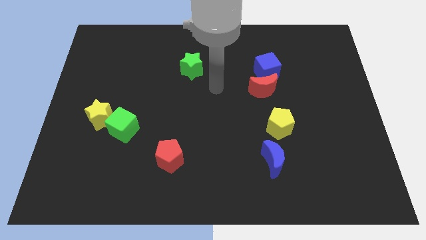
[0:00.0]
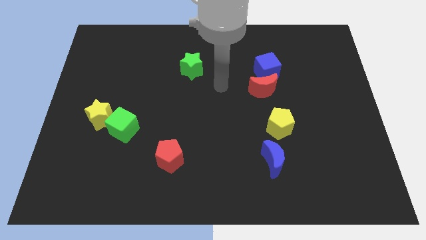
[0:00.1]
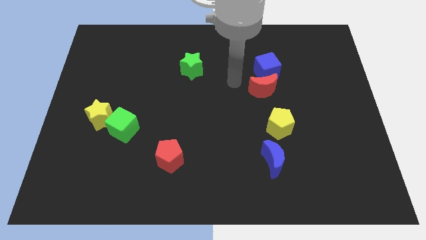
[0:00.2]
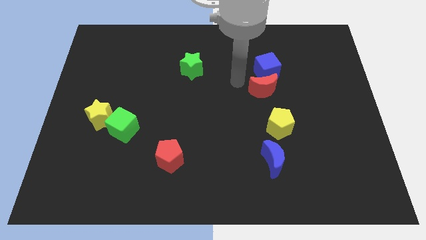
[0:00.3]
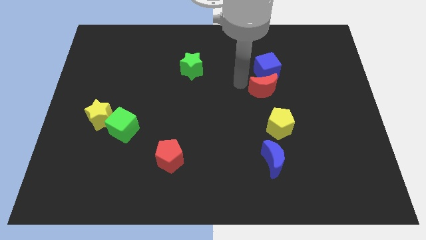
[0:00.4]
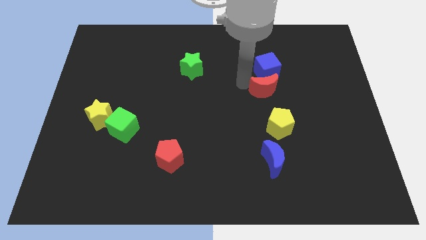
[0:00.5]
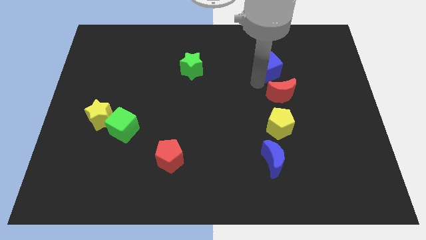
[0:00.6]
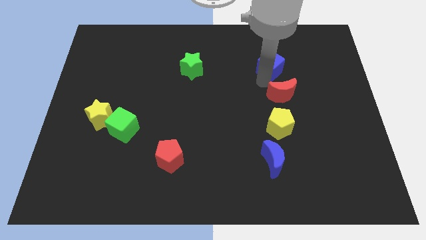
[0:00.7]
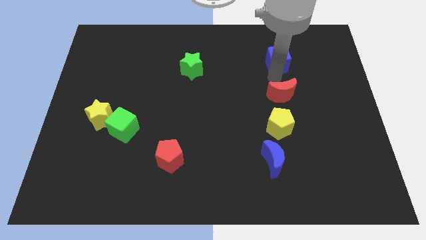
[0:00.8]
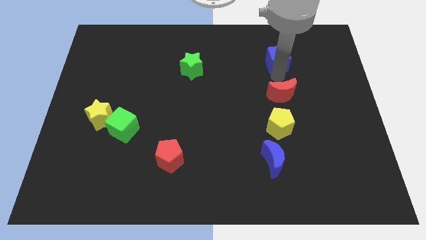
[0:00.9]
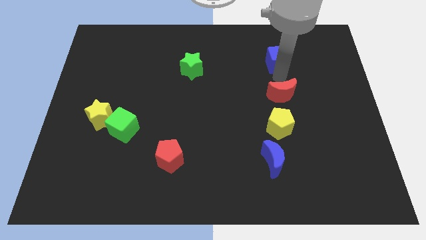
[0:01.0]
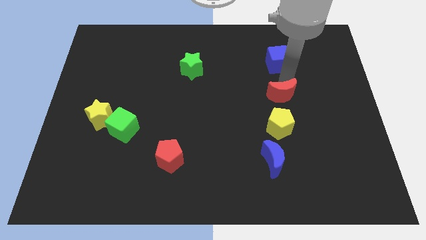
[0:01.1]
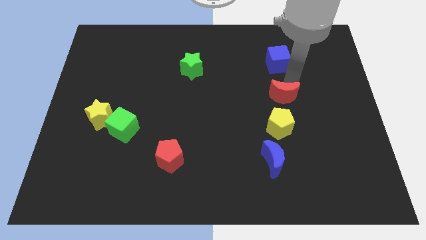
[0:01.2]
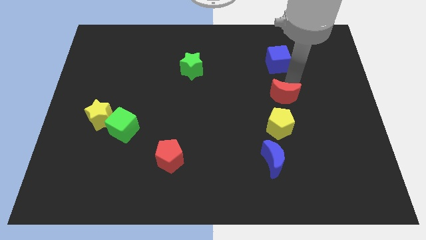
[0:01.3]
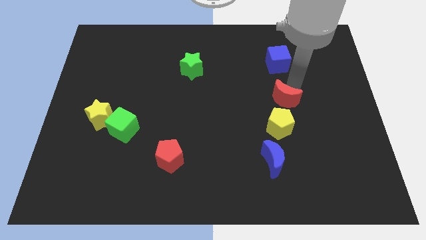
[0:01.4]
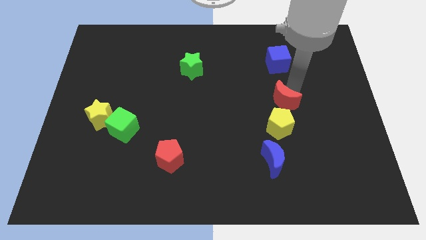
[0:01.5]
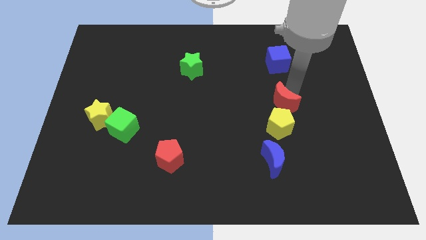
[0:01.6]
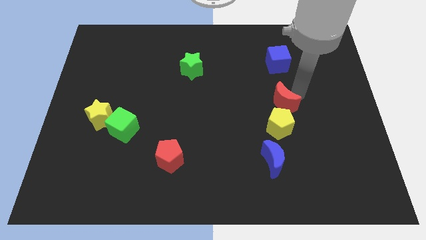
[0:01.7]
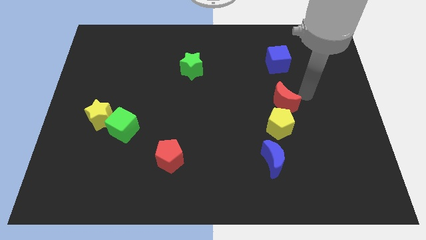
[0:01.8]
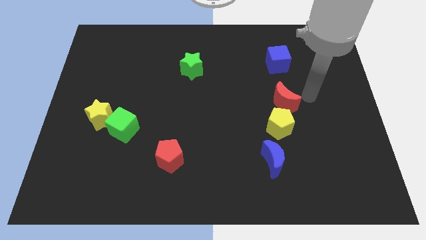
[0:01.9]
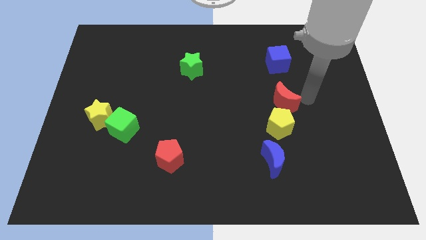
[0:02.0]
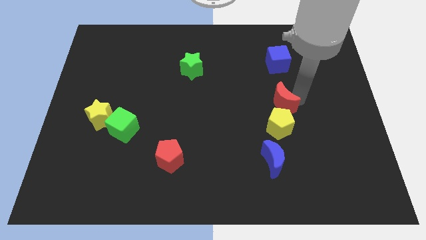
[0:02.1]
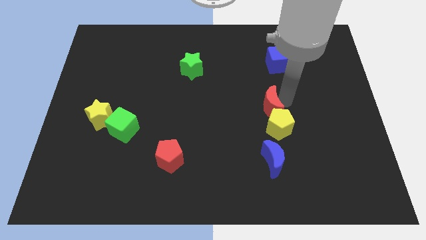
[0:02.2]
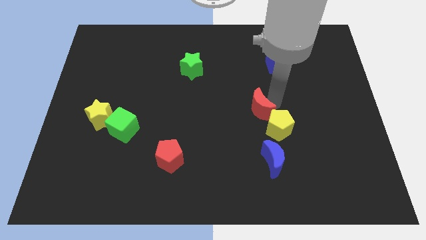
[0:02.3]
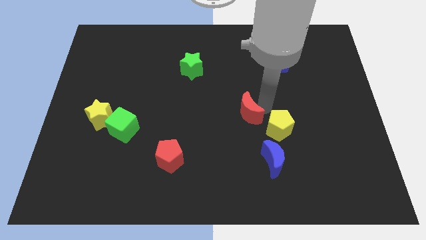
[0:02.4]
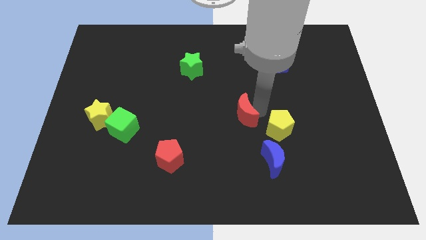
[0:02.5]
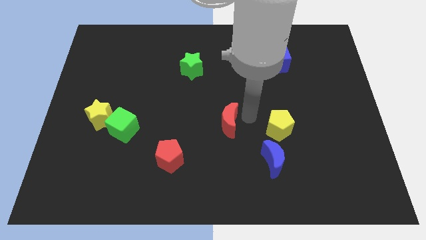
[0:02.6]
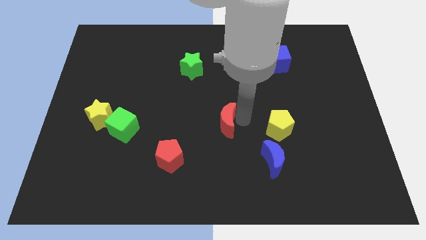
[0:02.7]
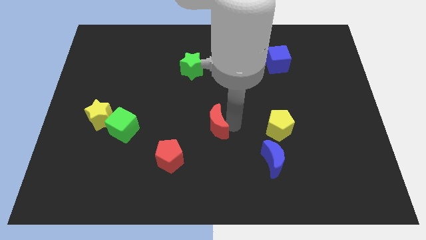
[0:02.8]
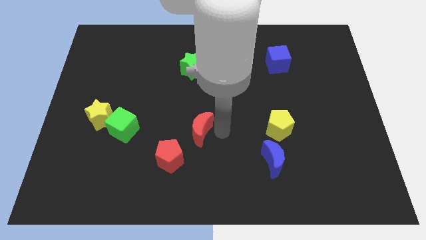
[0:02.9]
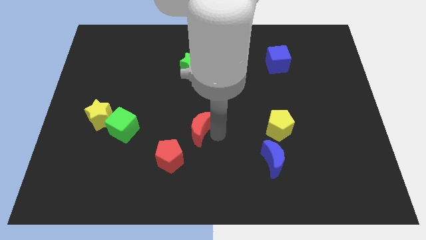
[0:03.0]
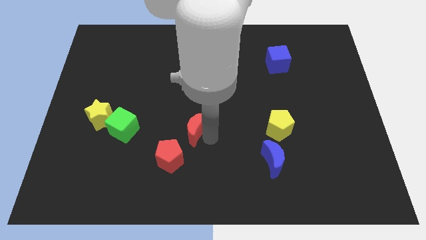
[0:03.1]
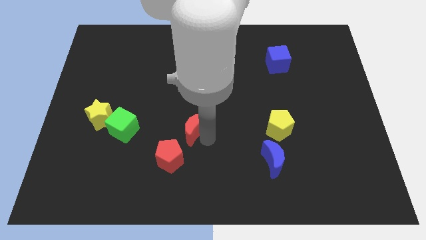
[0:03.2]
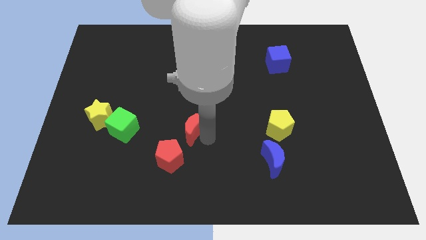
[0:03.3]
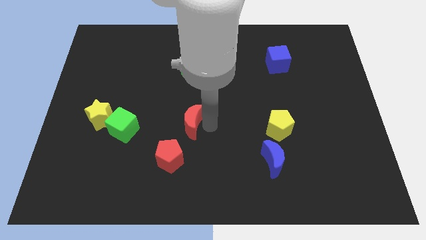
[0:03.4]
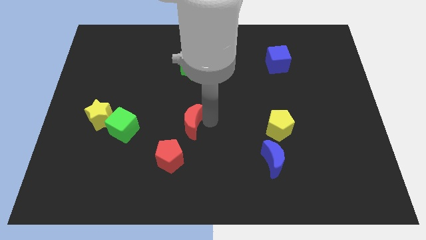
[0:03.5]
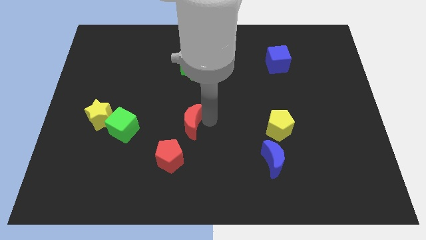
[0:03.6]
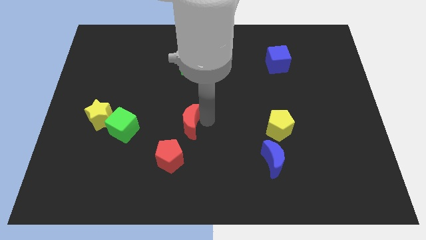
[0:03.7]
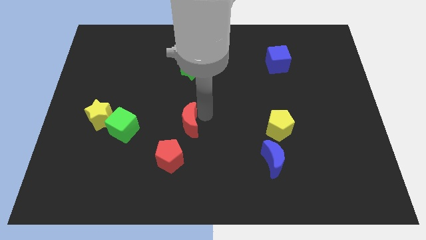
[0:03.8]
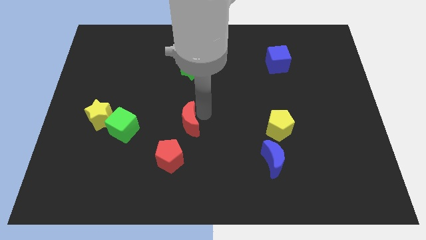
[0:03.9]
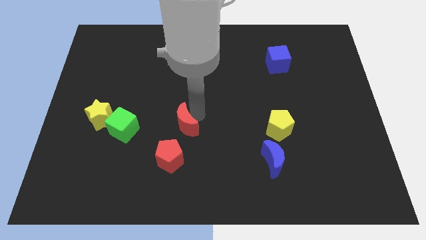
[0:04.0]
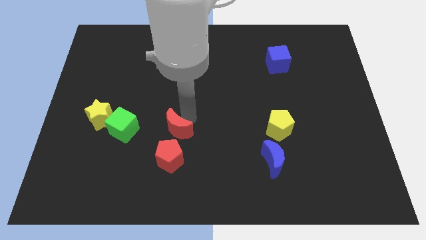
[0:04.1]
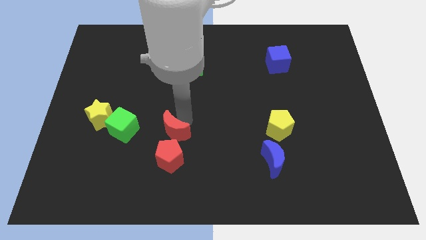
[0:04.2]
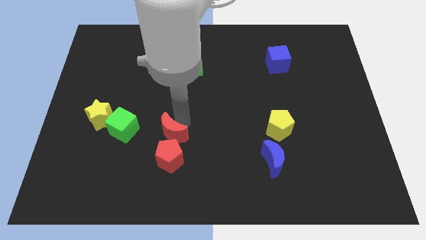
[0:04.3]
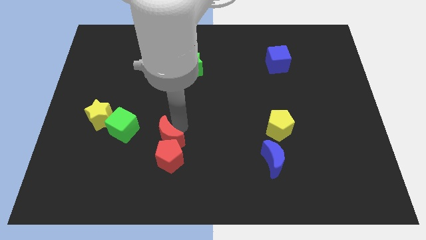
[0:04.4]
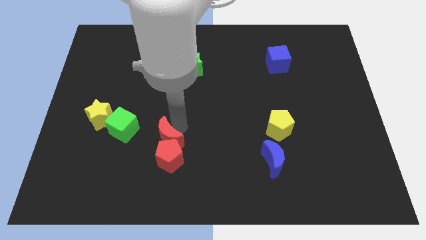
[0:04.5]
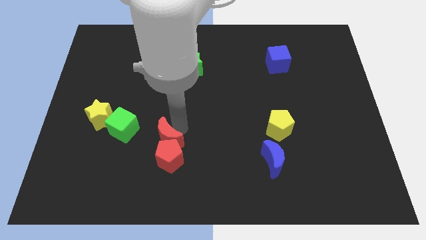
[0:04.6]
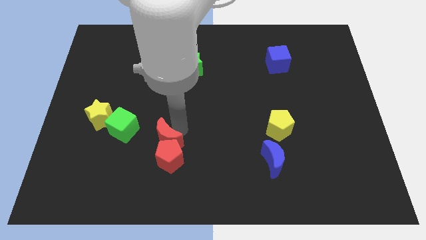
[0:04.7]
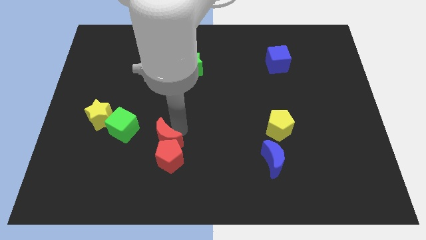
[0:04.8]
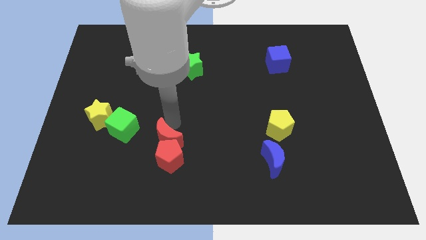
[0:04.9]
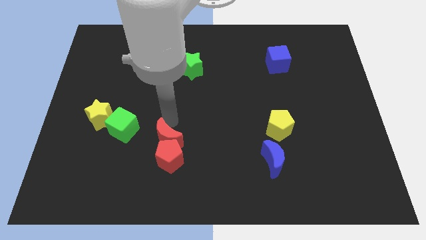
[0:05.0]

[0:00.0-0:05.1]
separate the red crescent from blue cube to place it above the red pentagon

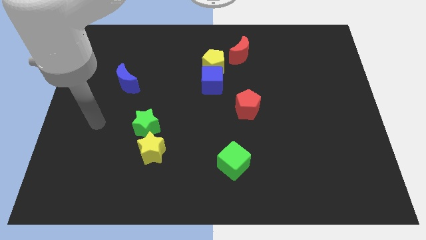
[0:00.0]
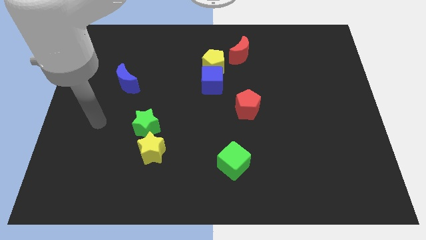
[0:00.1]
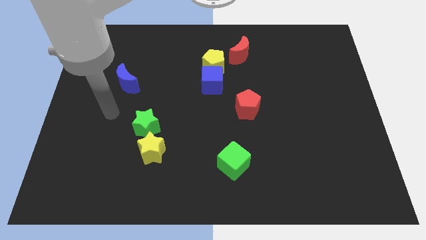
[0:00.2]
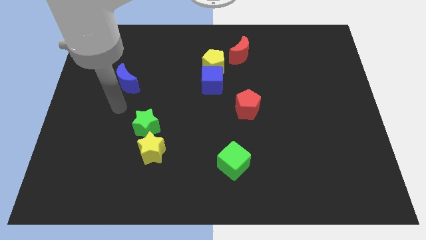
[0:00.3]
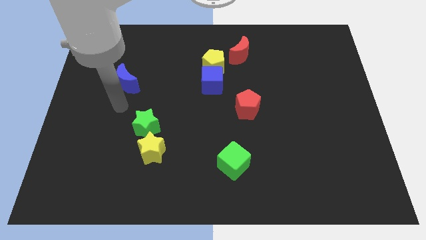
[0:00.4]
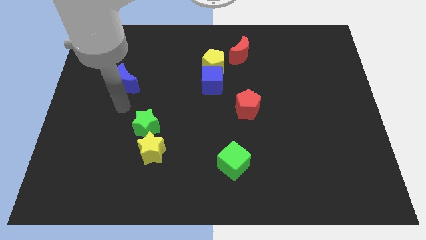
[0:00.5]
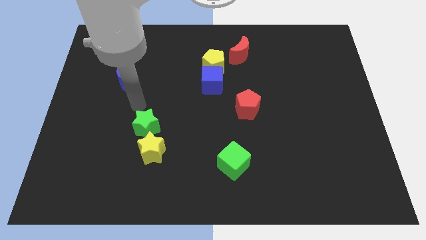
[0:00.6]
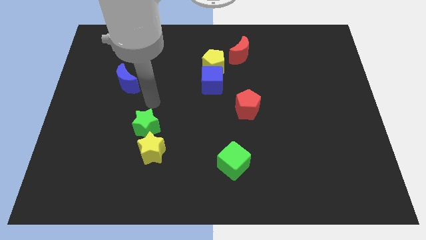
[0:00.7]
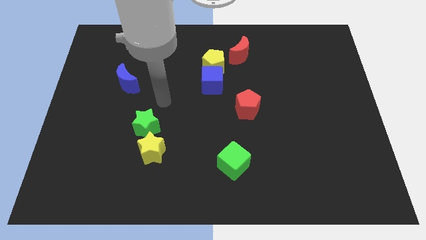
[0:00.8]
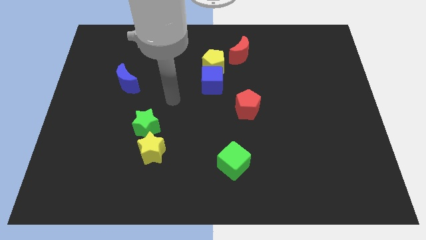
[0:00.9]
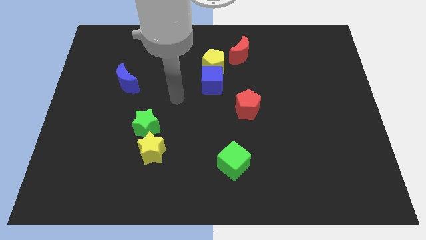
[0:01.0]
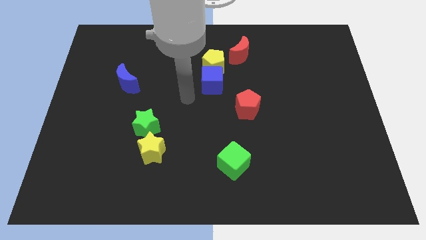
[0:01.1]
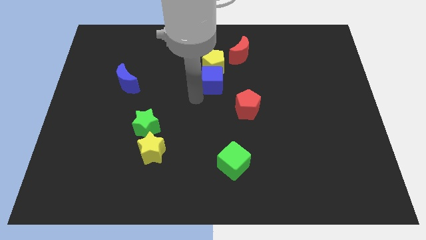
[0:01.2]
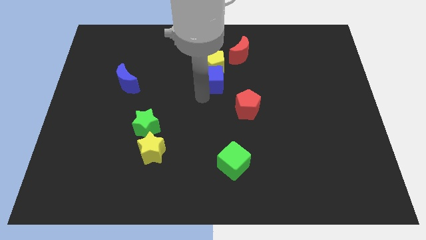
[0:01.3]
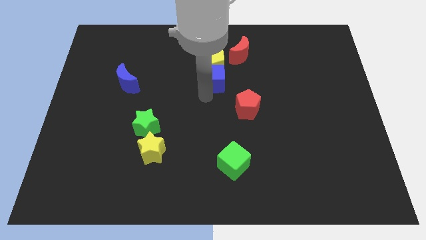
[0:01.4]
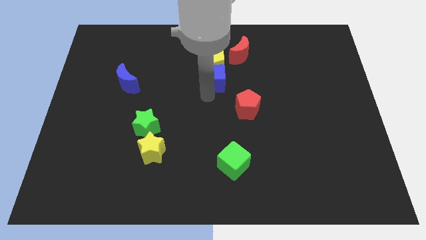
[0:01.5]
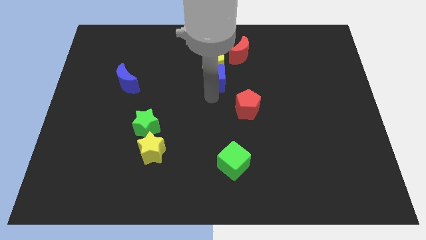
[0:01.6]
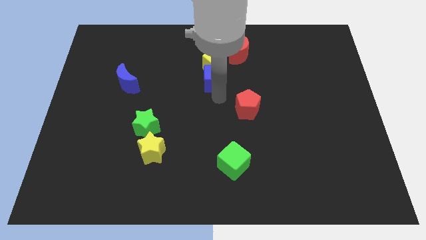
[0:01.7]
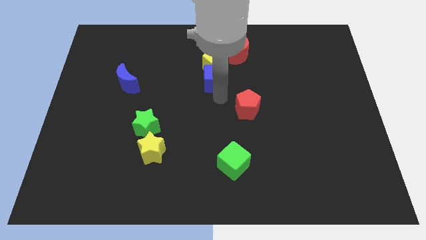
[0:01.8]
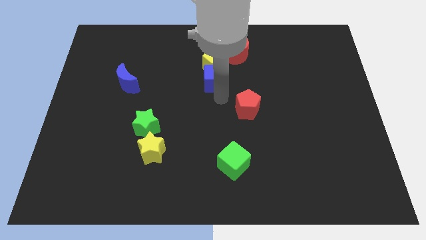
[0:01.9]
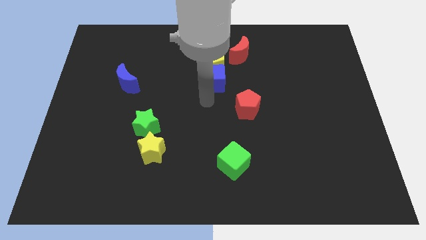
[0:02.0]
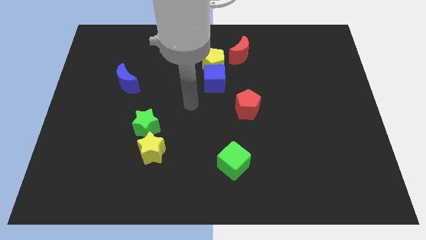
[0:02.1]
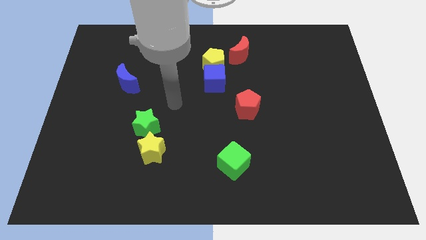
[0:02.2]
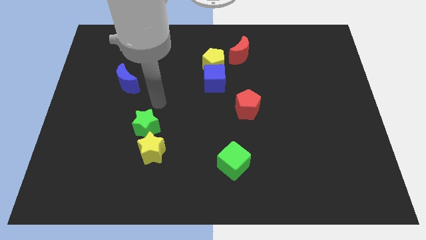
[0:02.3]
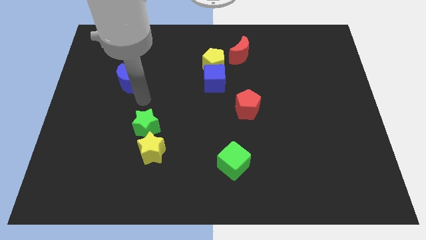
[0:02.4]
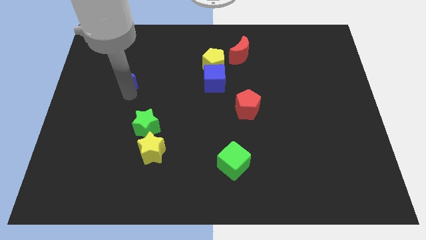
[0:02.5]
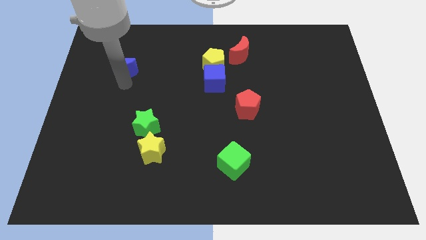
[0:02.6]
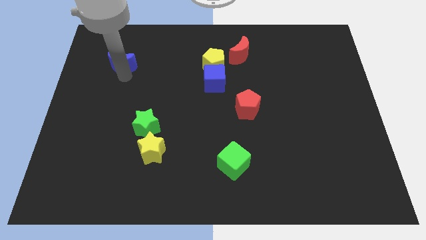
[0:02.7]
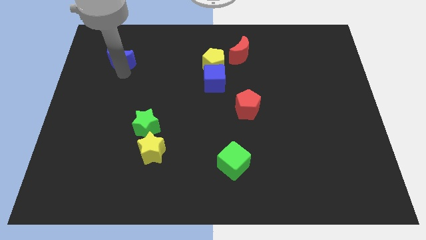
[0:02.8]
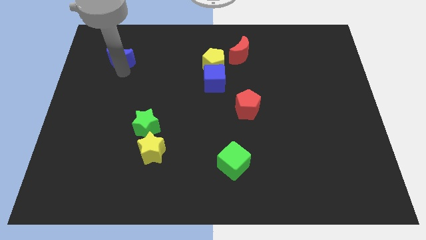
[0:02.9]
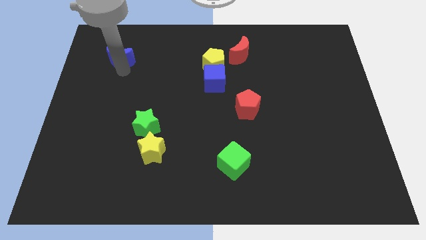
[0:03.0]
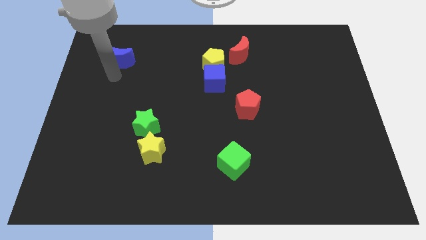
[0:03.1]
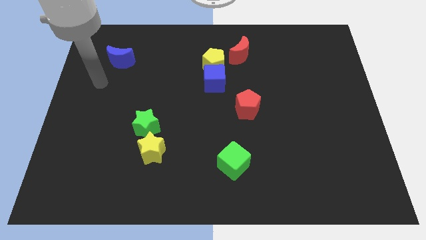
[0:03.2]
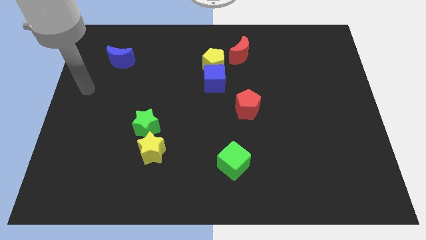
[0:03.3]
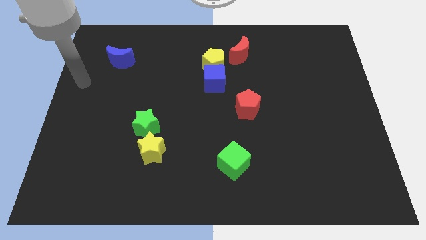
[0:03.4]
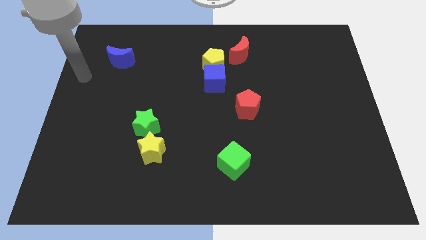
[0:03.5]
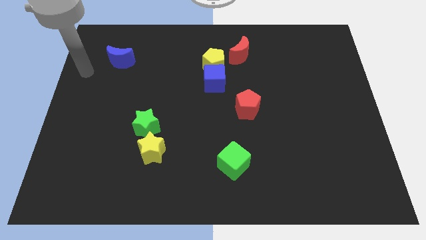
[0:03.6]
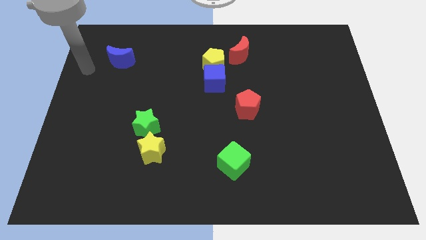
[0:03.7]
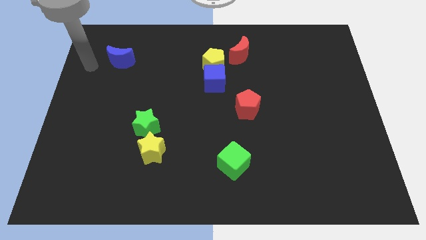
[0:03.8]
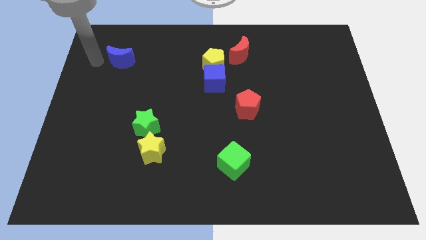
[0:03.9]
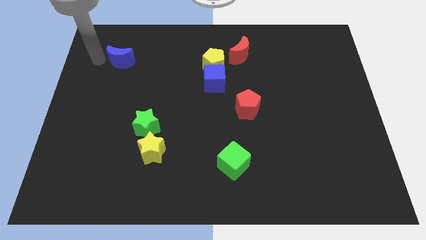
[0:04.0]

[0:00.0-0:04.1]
move the blue moon to the top left corner
